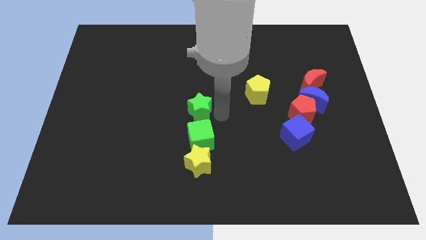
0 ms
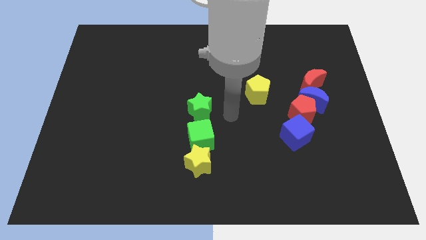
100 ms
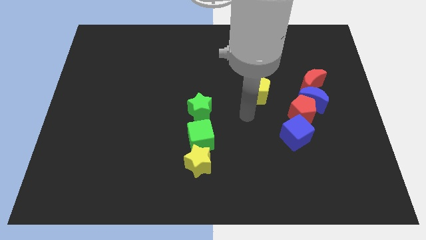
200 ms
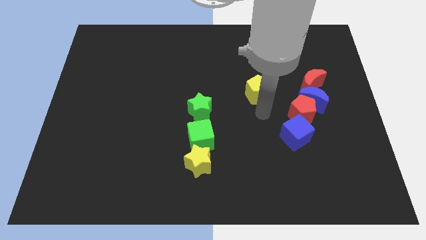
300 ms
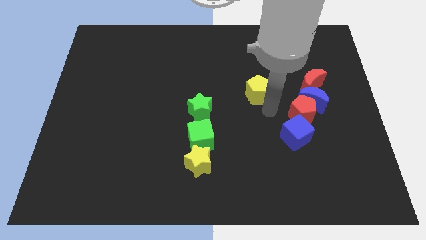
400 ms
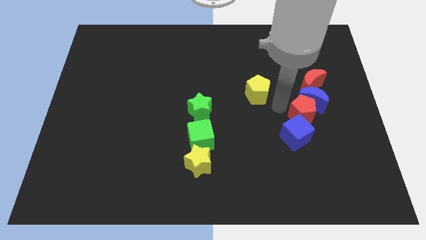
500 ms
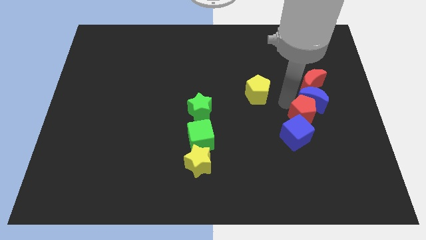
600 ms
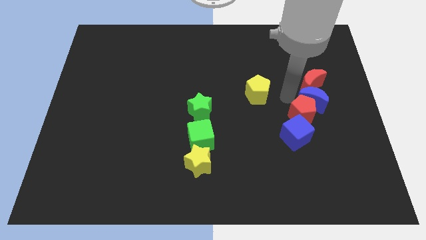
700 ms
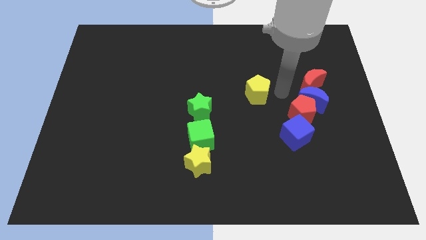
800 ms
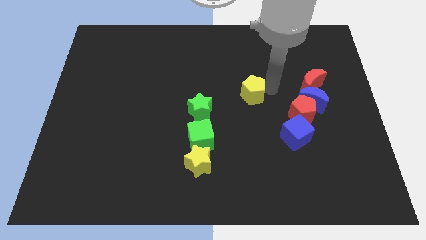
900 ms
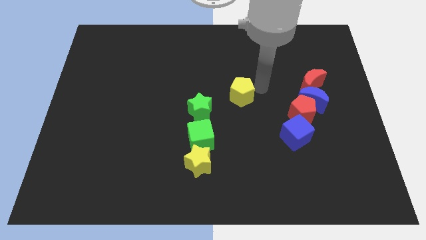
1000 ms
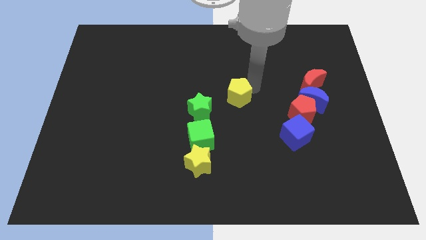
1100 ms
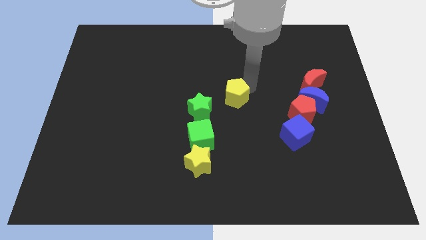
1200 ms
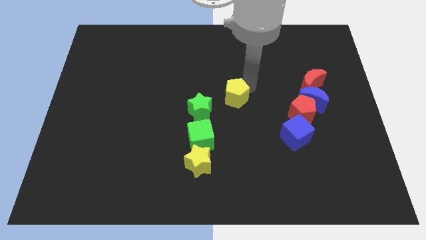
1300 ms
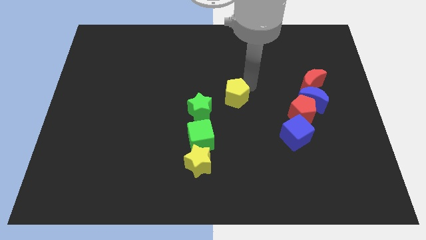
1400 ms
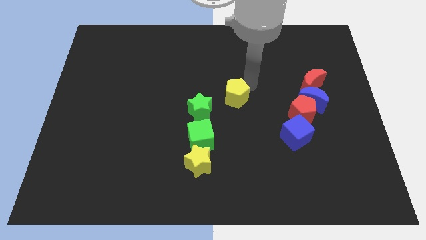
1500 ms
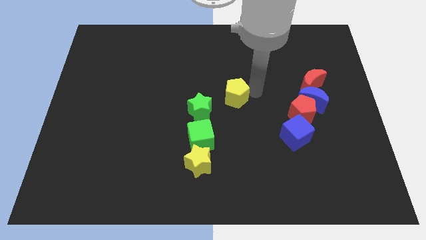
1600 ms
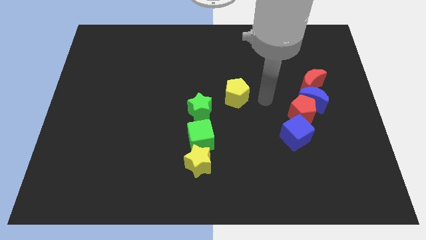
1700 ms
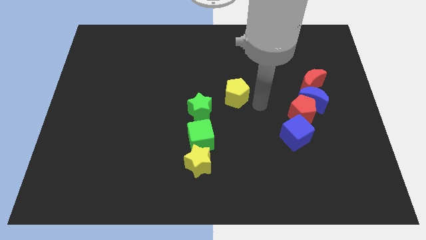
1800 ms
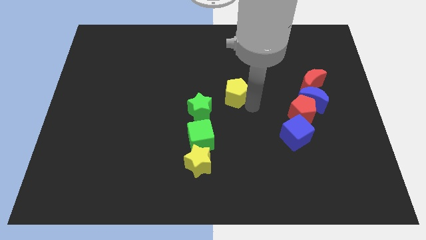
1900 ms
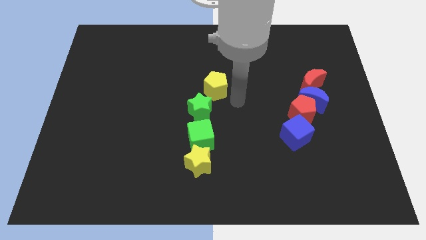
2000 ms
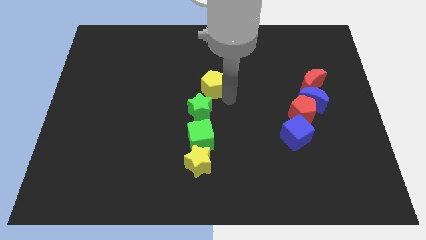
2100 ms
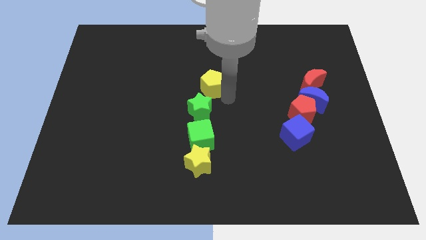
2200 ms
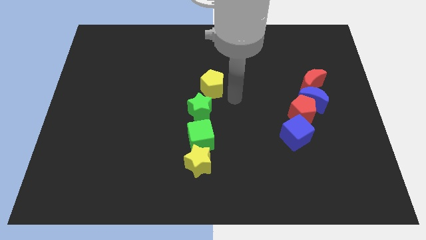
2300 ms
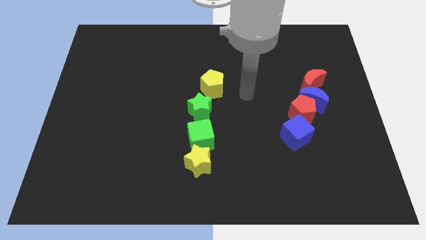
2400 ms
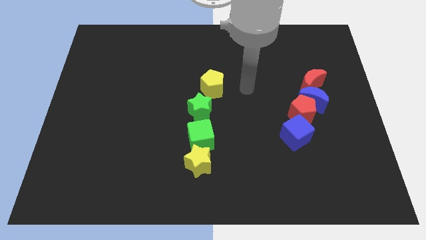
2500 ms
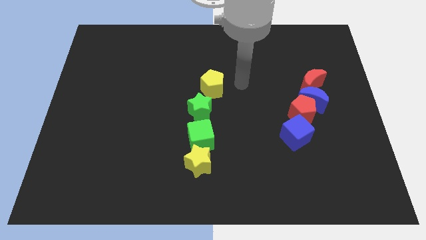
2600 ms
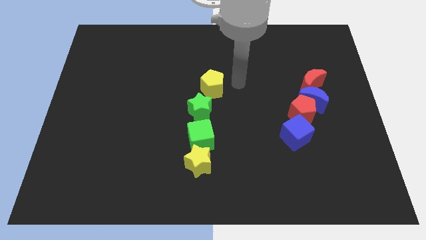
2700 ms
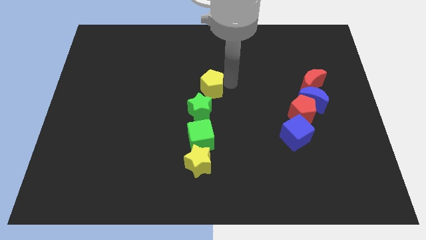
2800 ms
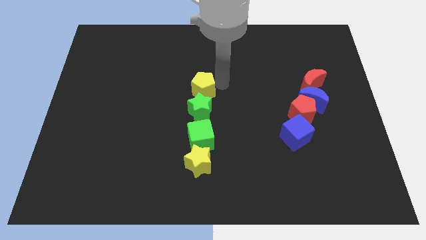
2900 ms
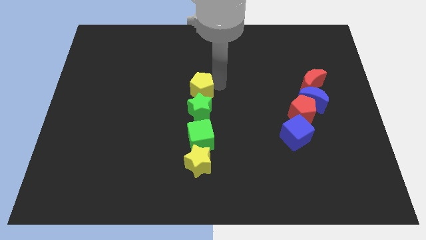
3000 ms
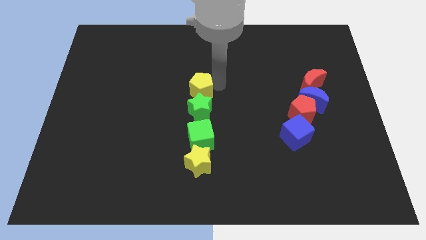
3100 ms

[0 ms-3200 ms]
place the yellow pentagon above the green star

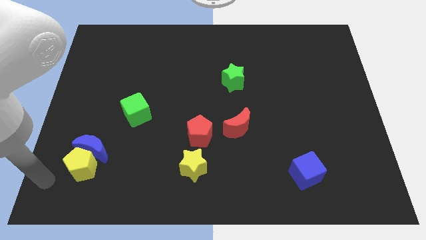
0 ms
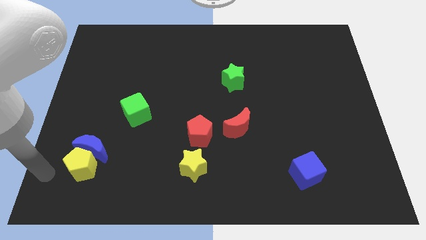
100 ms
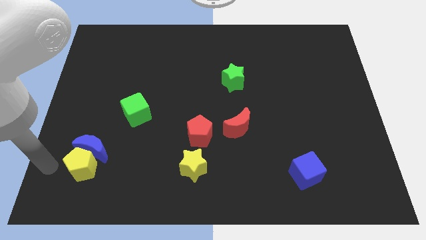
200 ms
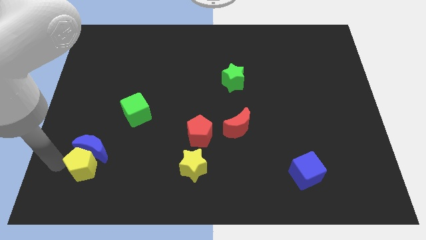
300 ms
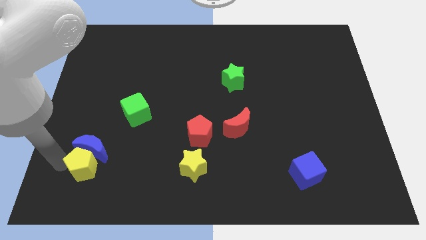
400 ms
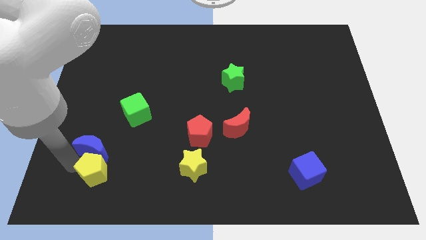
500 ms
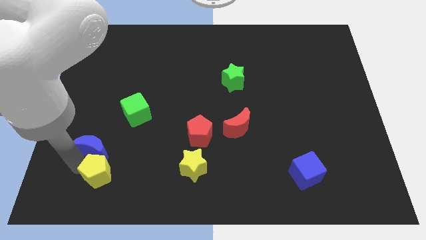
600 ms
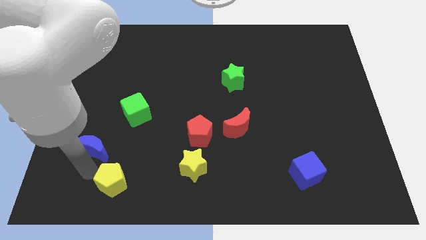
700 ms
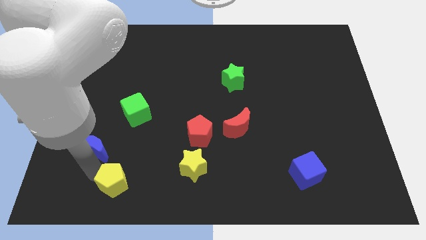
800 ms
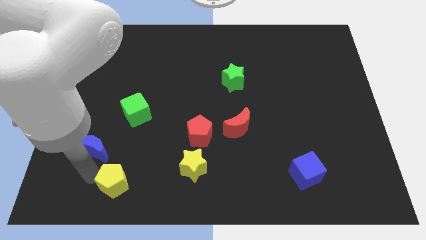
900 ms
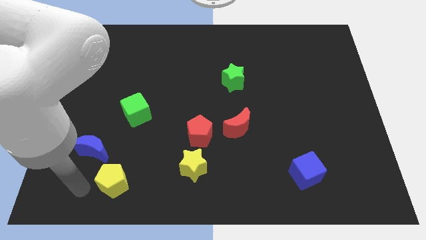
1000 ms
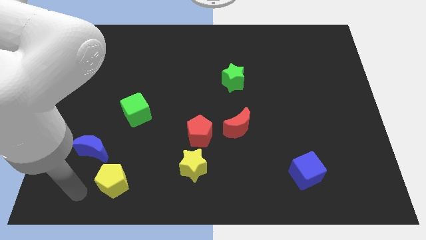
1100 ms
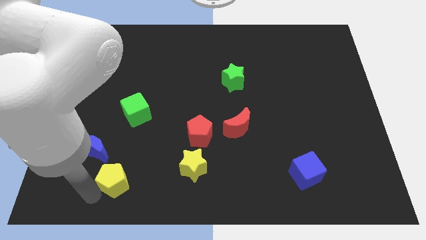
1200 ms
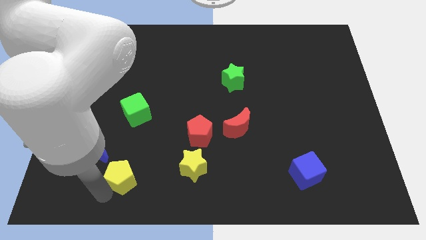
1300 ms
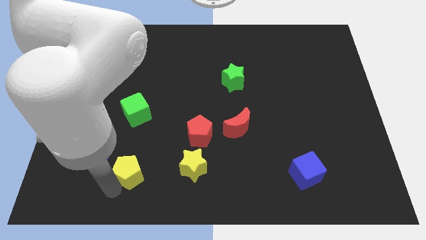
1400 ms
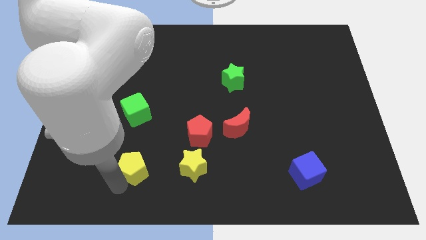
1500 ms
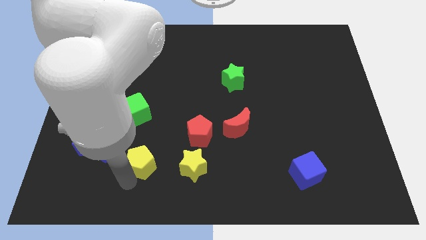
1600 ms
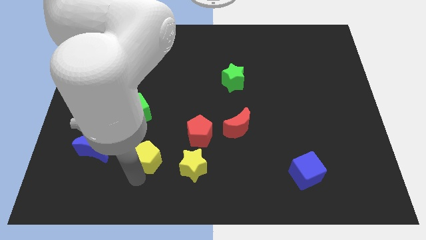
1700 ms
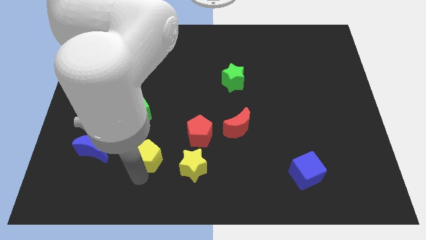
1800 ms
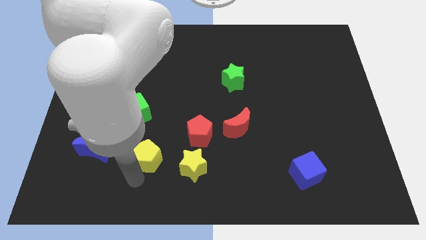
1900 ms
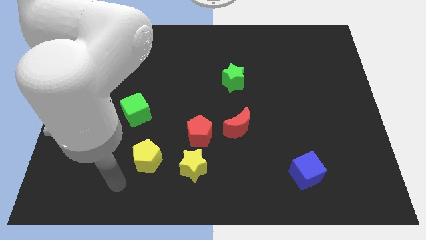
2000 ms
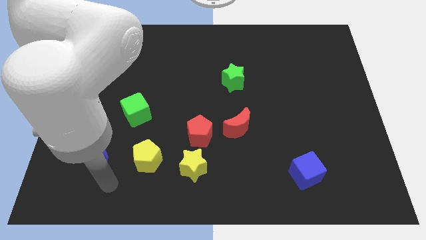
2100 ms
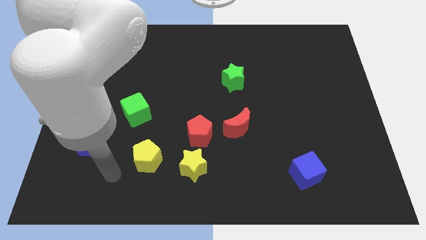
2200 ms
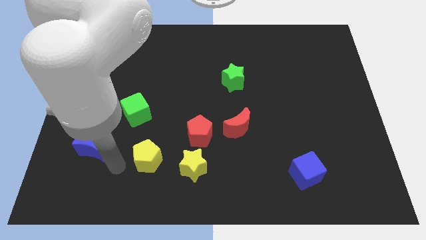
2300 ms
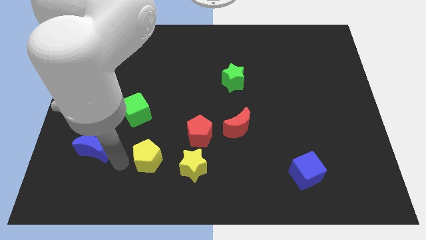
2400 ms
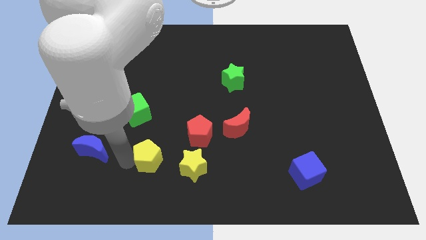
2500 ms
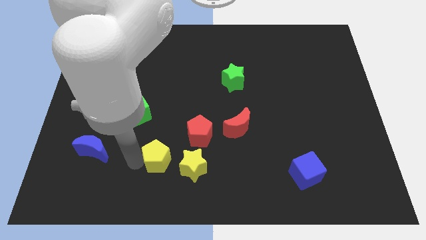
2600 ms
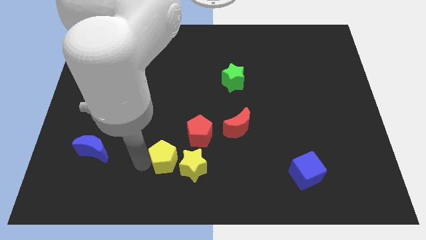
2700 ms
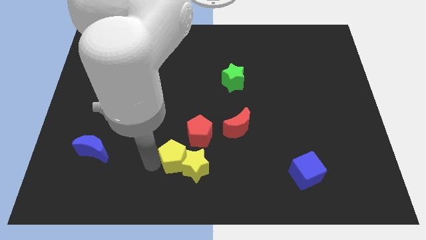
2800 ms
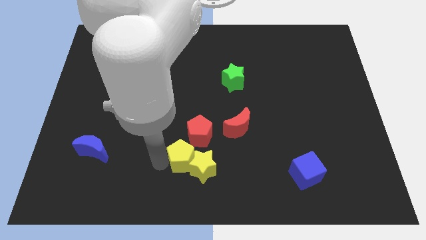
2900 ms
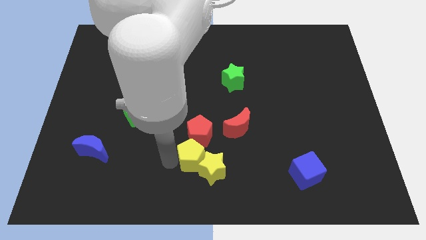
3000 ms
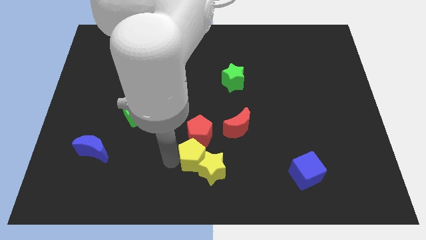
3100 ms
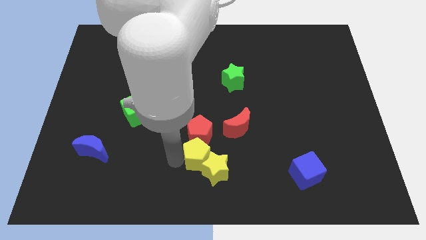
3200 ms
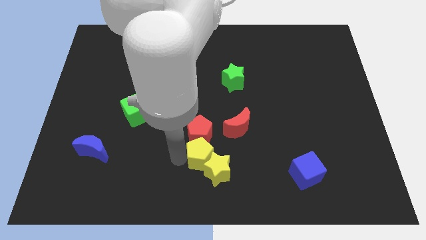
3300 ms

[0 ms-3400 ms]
push the yellow pentagon into the yellow star

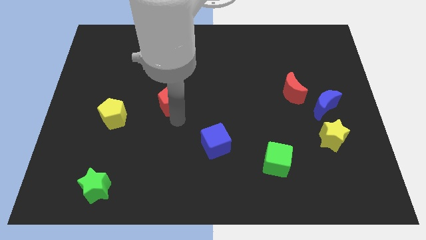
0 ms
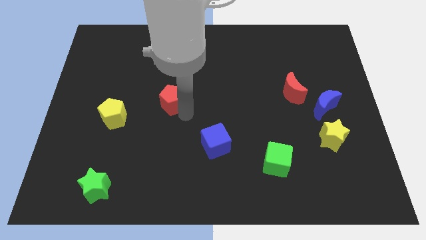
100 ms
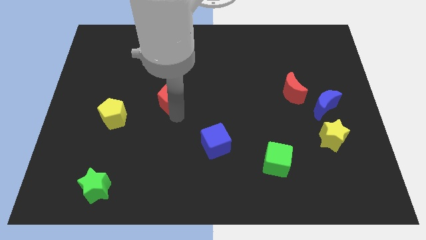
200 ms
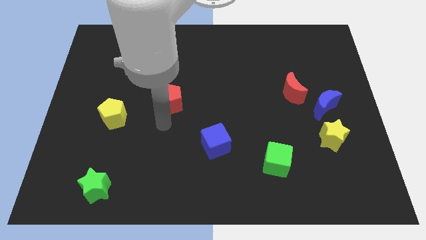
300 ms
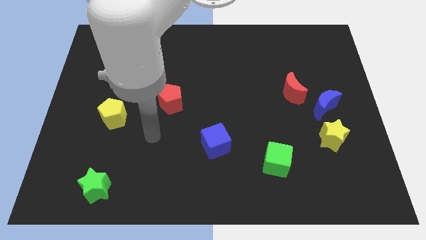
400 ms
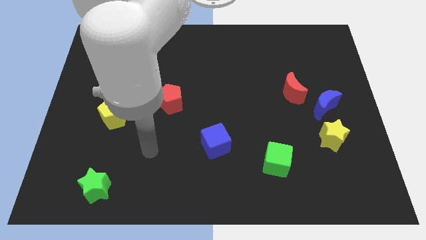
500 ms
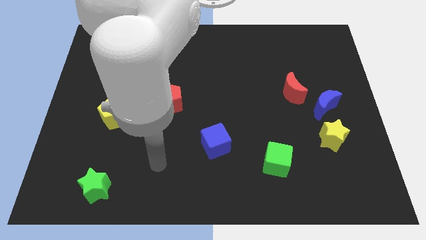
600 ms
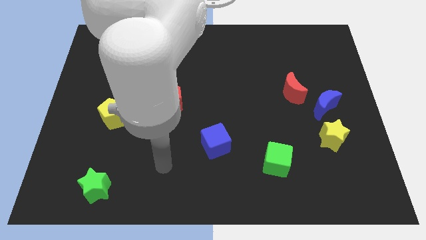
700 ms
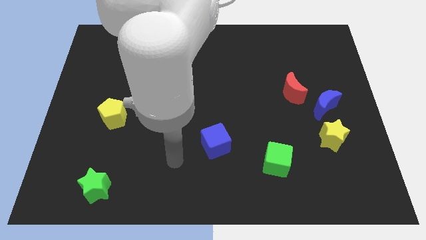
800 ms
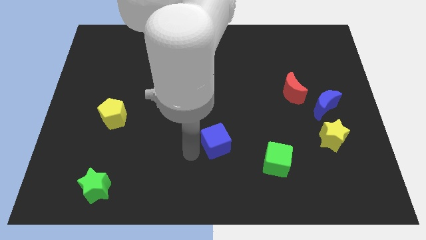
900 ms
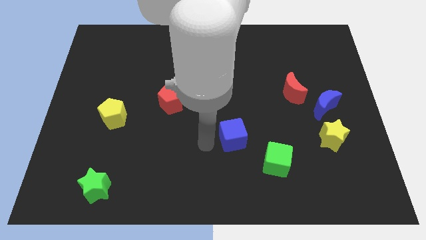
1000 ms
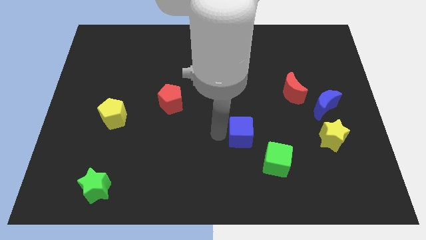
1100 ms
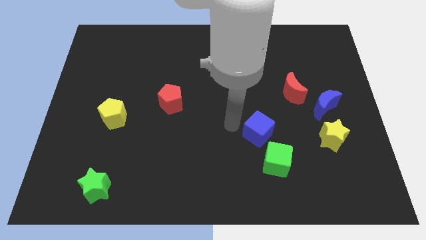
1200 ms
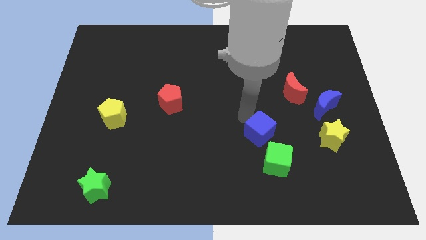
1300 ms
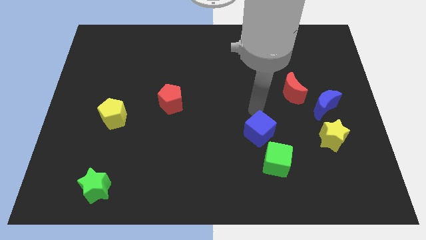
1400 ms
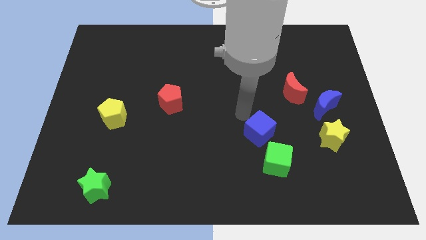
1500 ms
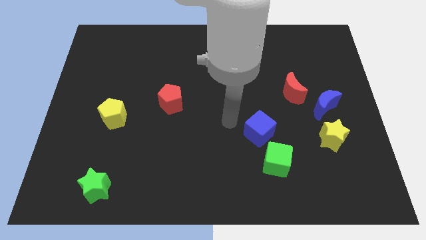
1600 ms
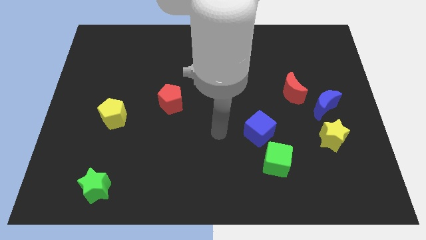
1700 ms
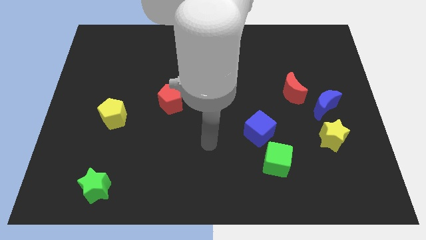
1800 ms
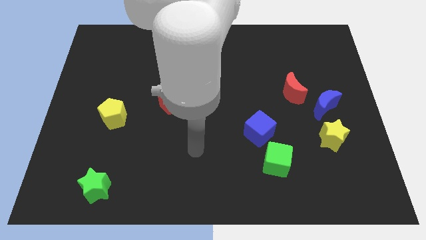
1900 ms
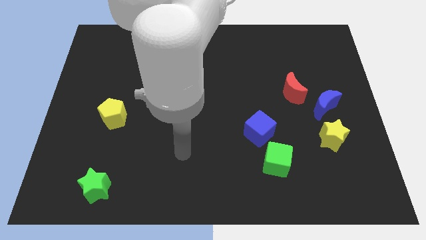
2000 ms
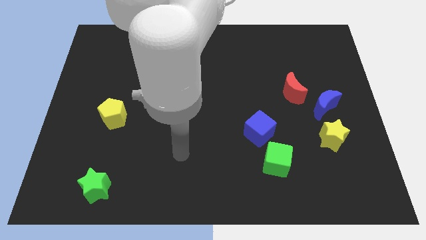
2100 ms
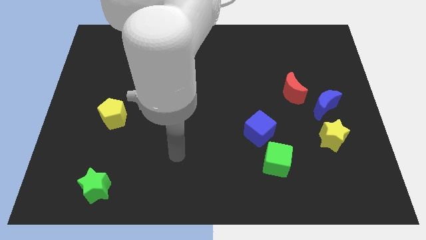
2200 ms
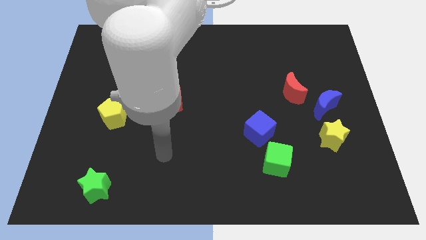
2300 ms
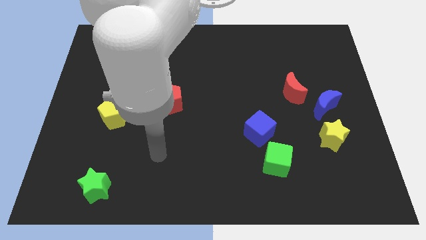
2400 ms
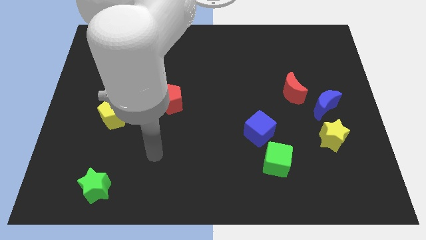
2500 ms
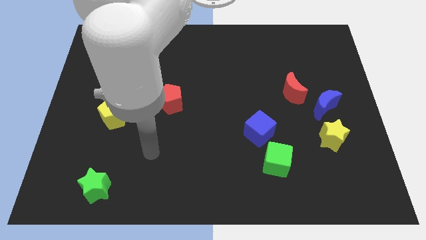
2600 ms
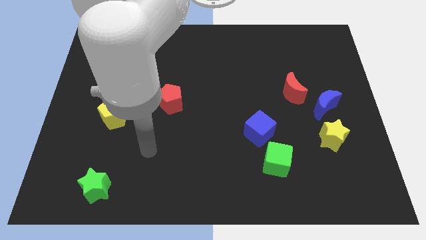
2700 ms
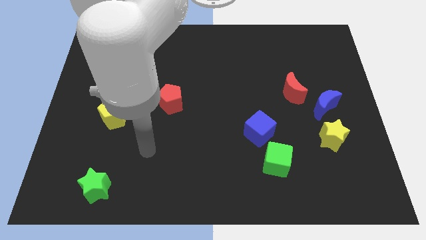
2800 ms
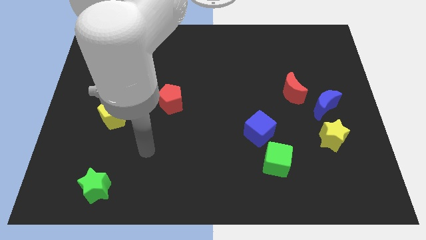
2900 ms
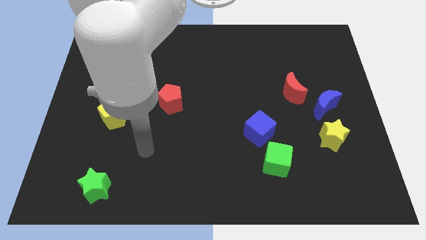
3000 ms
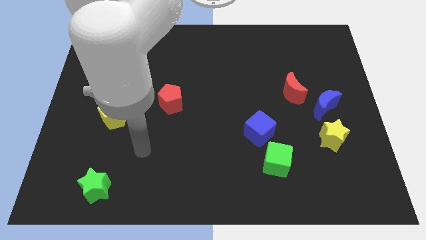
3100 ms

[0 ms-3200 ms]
place the blue cube left to the yellow star
